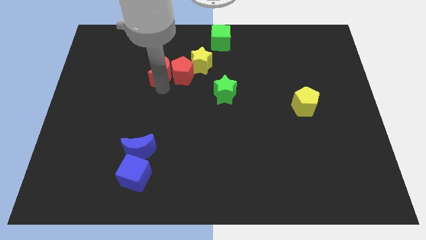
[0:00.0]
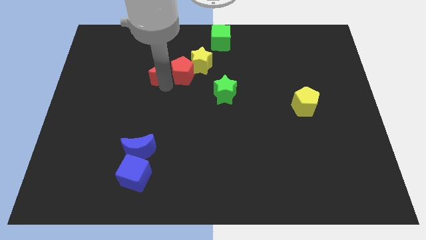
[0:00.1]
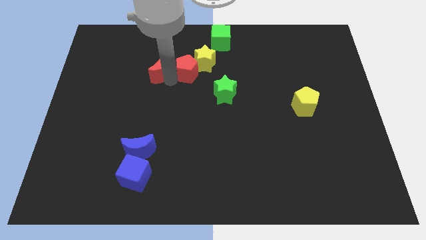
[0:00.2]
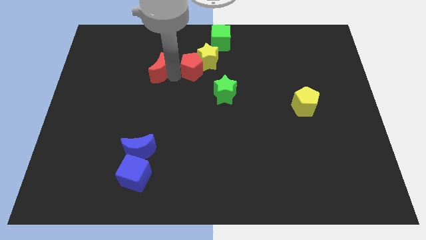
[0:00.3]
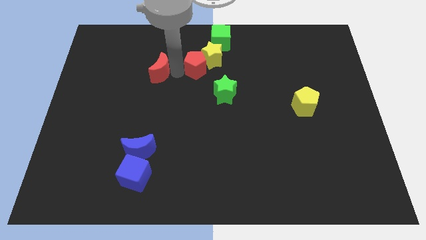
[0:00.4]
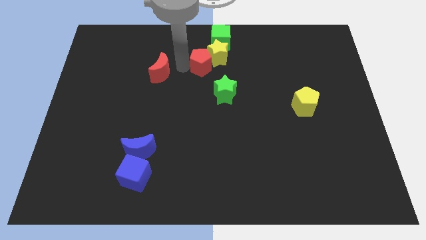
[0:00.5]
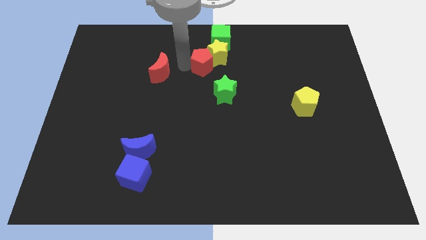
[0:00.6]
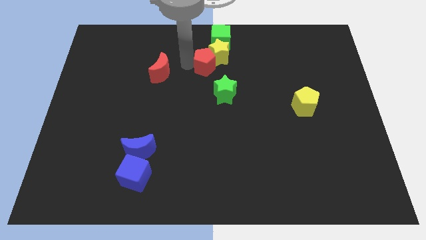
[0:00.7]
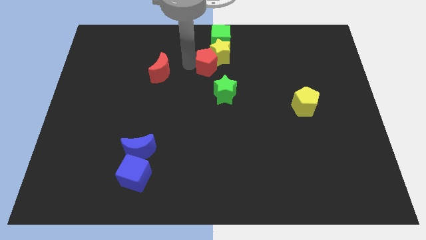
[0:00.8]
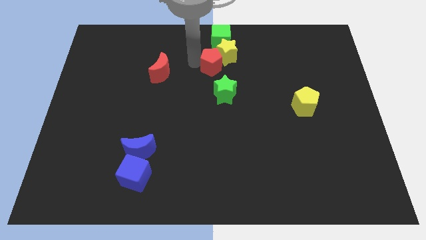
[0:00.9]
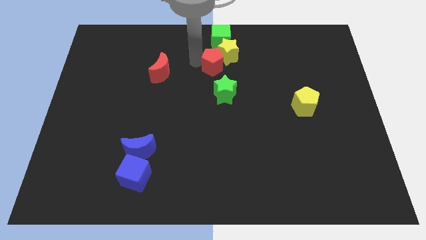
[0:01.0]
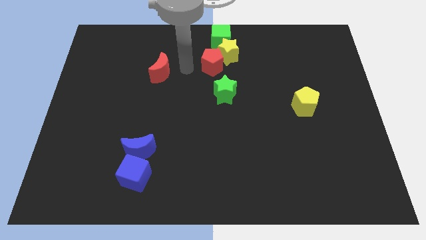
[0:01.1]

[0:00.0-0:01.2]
move the red crescent along with the yellow star to the green cube

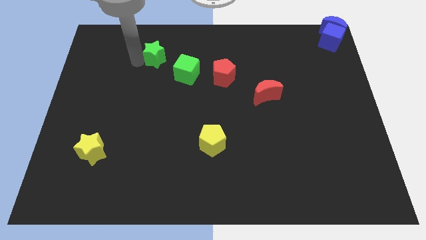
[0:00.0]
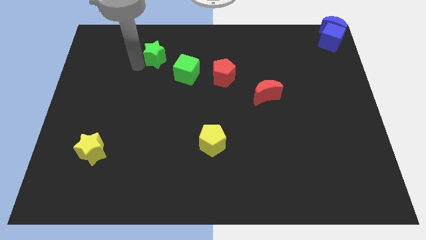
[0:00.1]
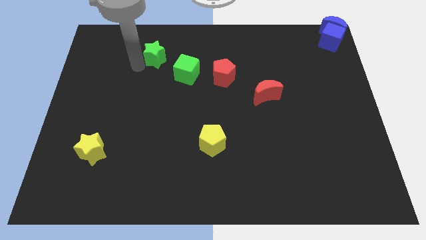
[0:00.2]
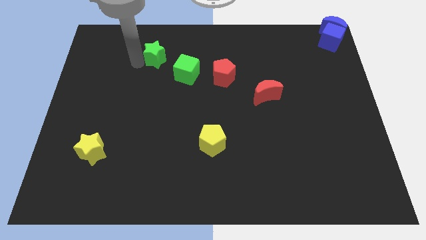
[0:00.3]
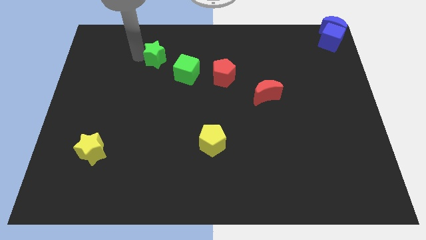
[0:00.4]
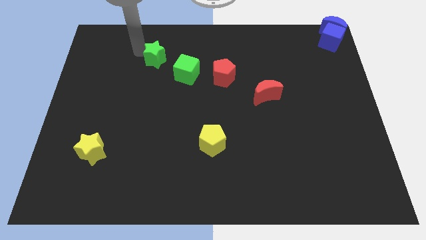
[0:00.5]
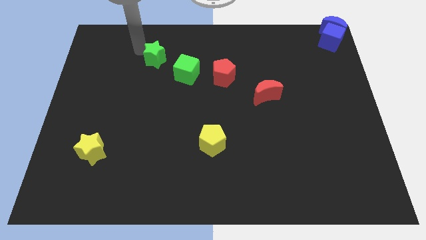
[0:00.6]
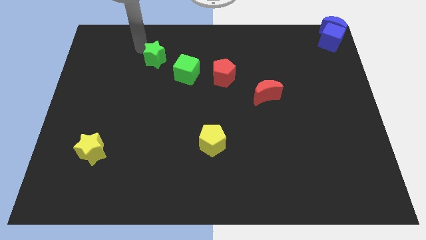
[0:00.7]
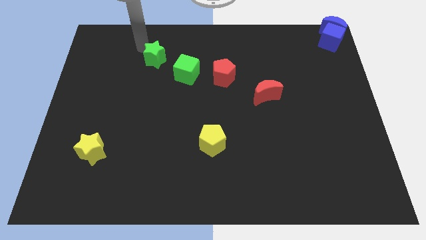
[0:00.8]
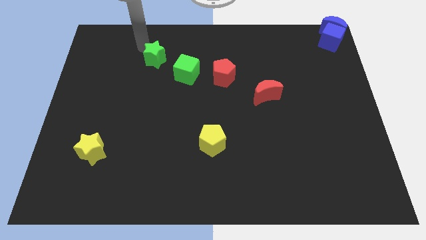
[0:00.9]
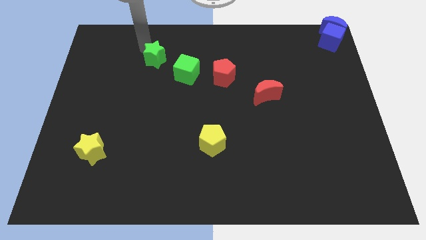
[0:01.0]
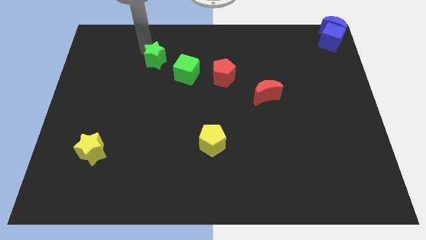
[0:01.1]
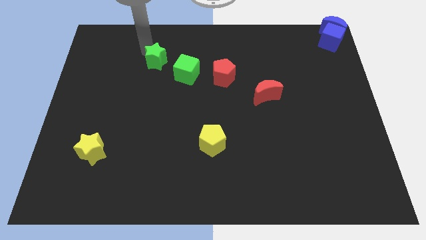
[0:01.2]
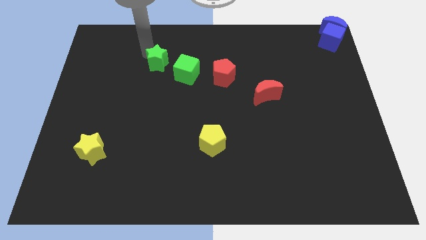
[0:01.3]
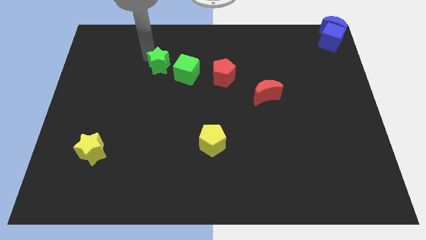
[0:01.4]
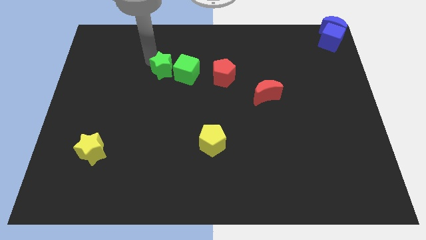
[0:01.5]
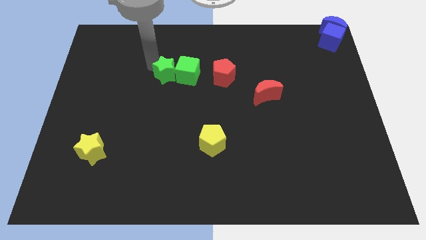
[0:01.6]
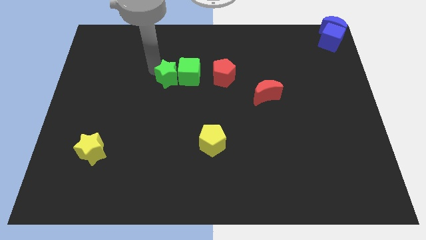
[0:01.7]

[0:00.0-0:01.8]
move the green star to the left of the green cube

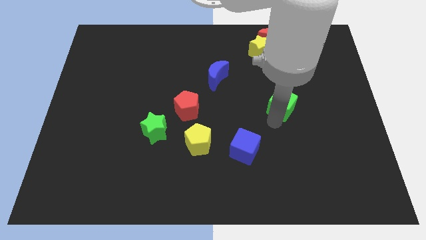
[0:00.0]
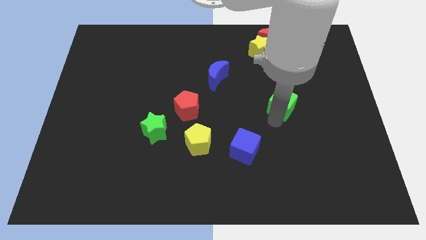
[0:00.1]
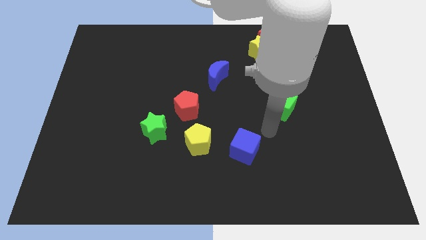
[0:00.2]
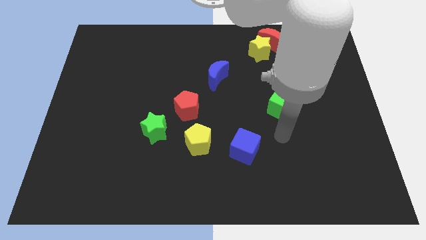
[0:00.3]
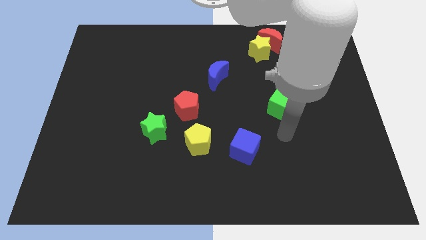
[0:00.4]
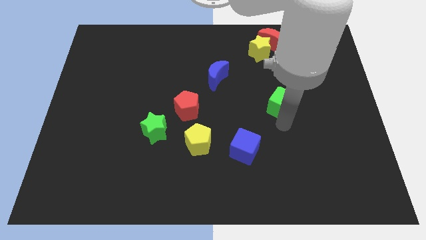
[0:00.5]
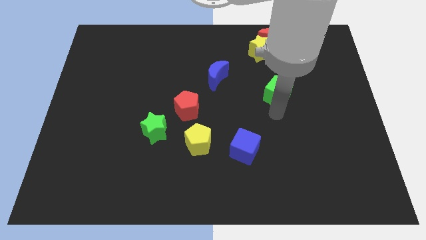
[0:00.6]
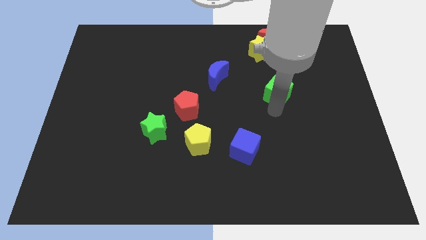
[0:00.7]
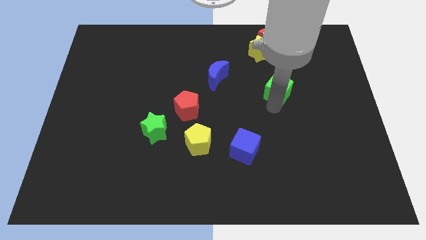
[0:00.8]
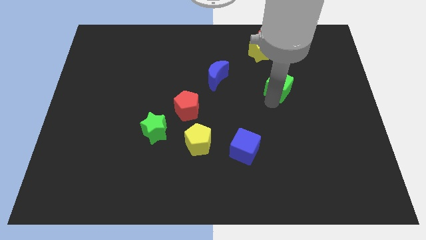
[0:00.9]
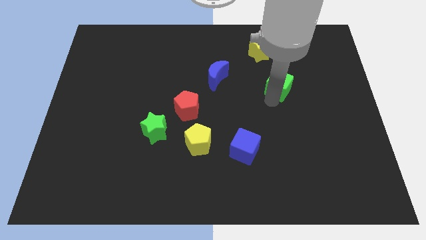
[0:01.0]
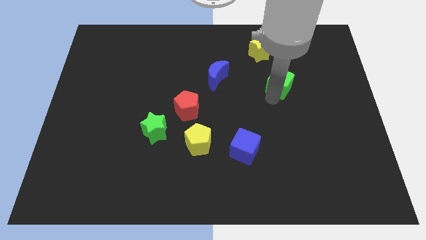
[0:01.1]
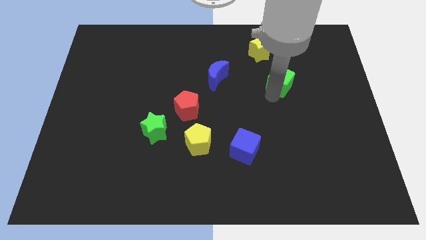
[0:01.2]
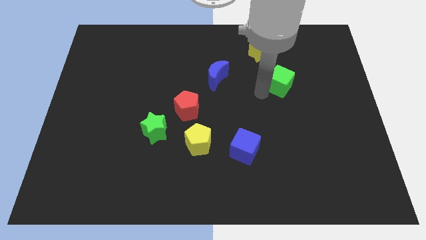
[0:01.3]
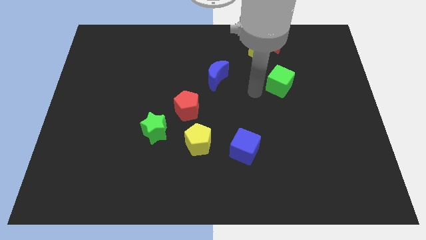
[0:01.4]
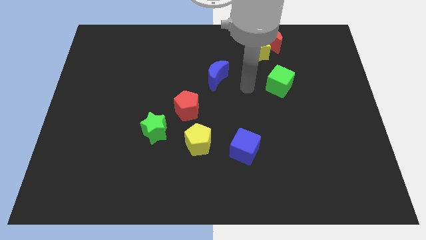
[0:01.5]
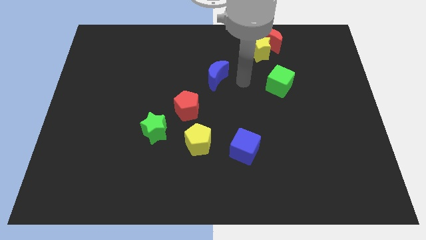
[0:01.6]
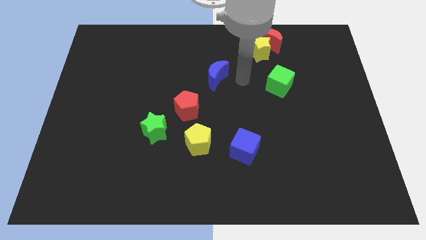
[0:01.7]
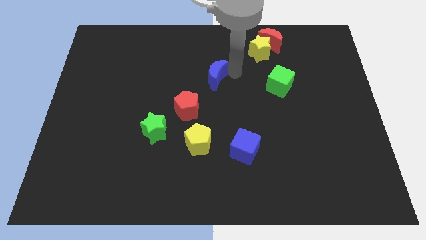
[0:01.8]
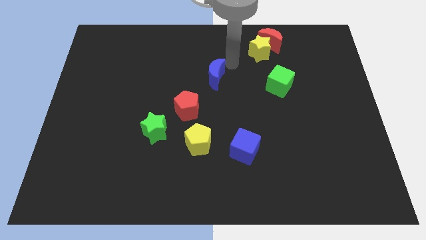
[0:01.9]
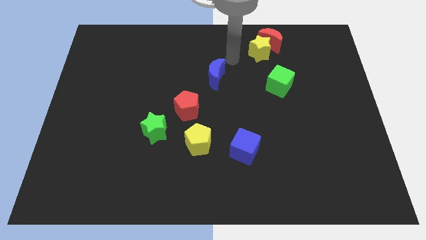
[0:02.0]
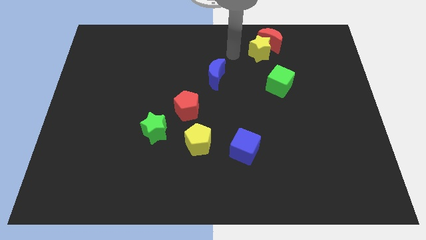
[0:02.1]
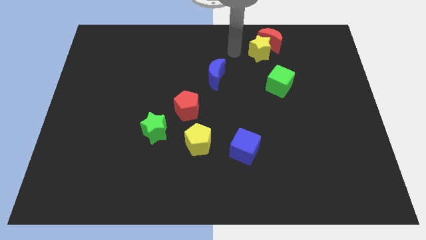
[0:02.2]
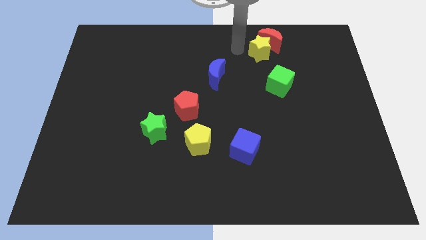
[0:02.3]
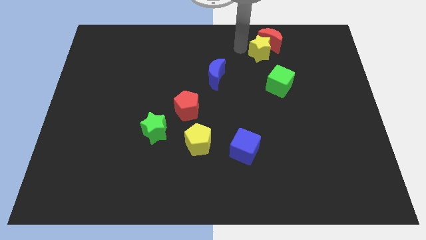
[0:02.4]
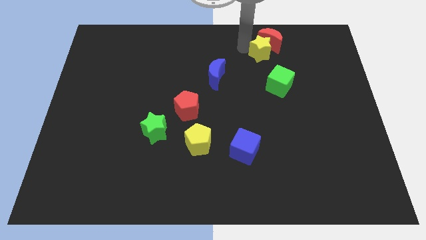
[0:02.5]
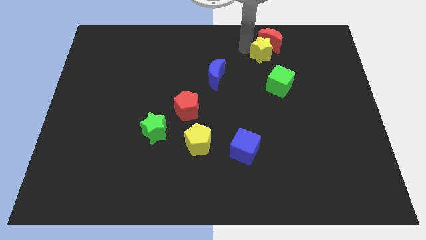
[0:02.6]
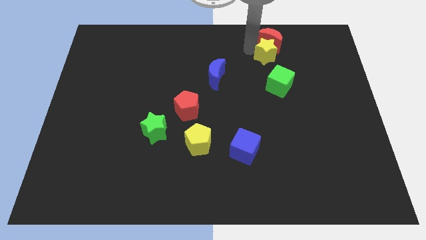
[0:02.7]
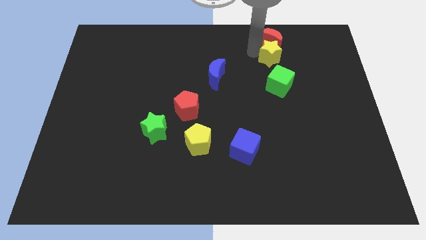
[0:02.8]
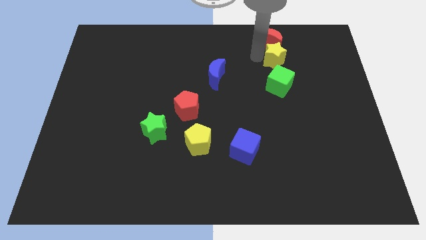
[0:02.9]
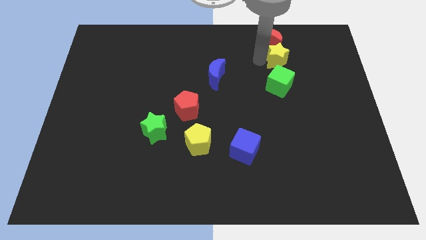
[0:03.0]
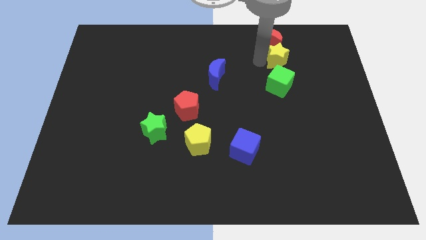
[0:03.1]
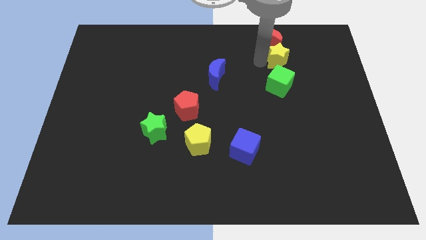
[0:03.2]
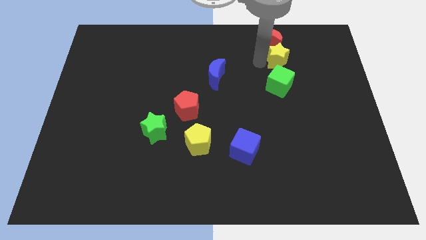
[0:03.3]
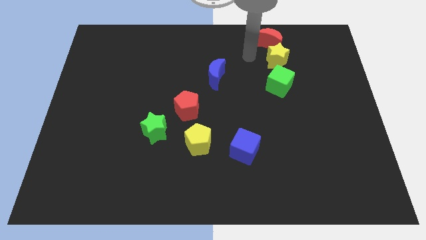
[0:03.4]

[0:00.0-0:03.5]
push the yellow star slightly to the right

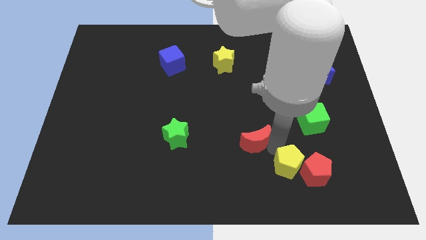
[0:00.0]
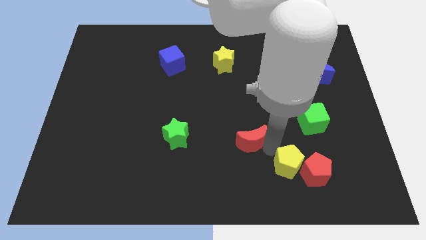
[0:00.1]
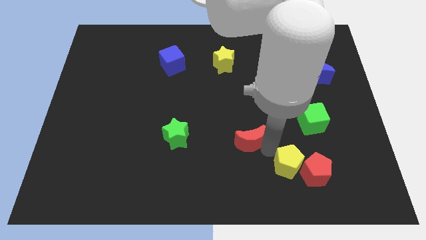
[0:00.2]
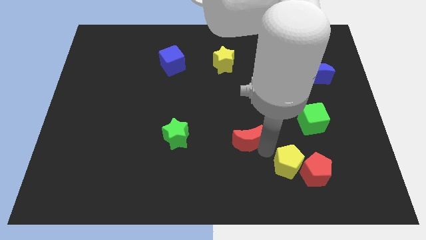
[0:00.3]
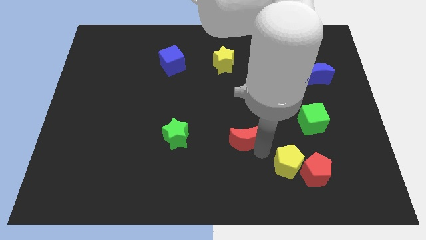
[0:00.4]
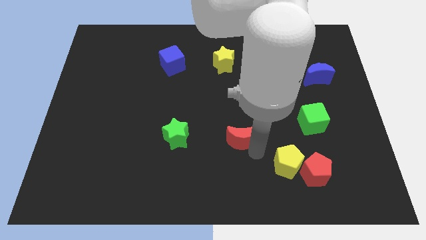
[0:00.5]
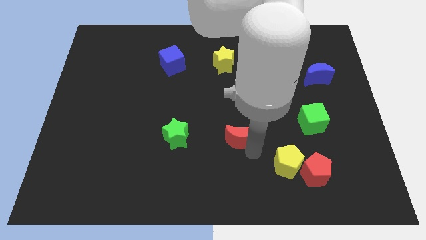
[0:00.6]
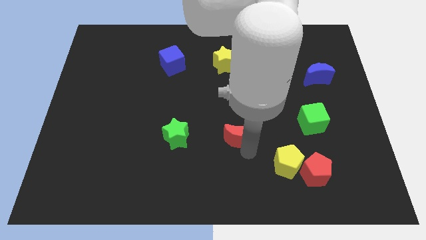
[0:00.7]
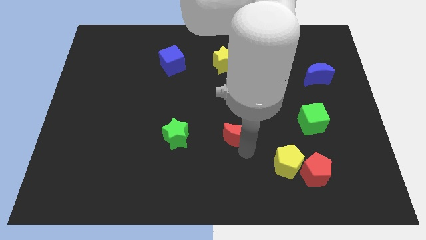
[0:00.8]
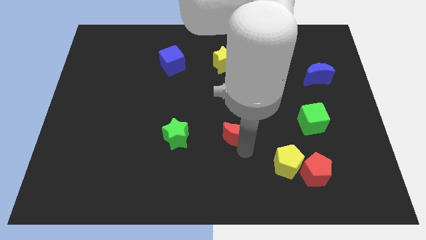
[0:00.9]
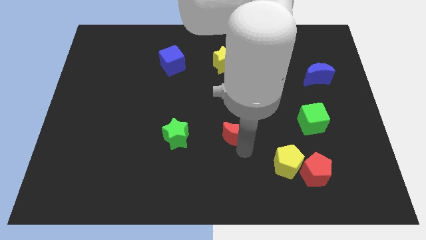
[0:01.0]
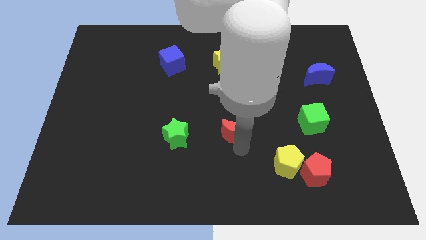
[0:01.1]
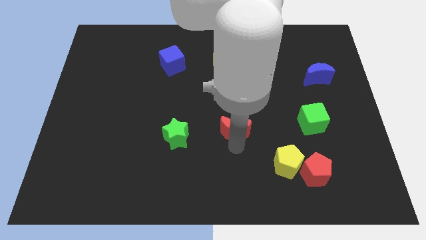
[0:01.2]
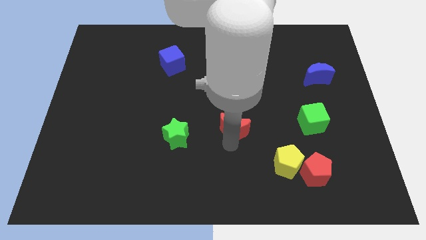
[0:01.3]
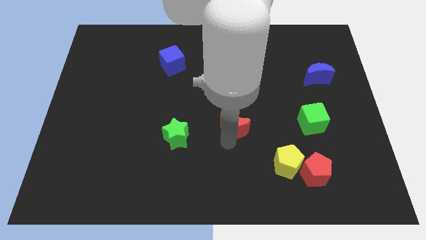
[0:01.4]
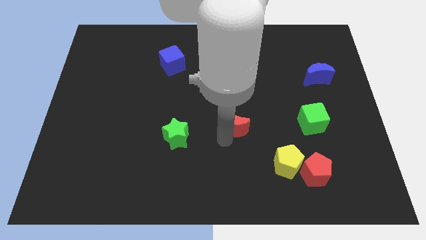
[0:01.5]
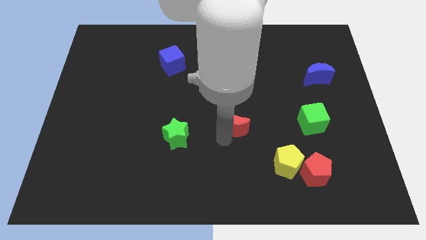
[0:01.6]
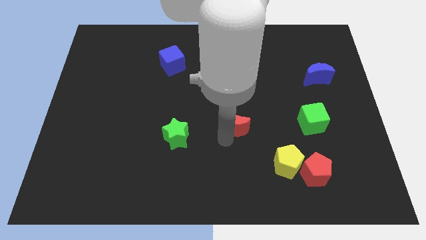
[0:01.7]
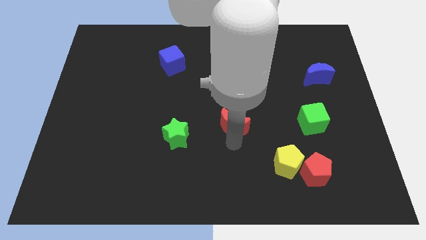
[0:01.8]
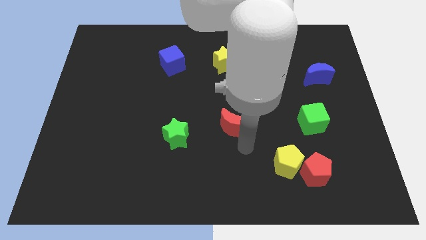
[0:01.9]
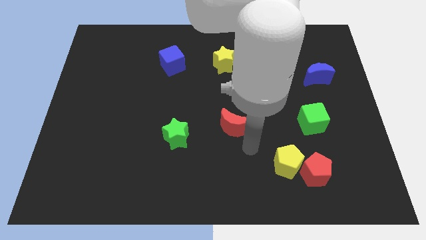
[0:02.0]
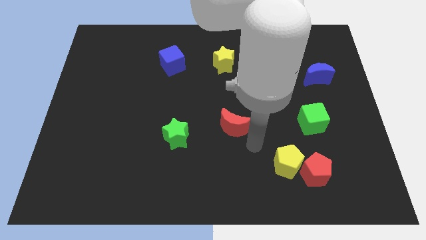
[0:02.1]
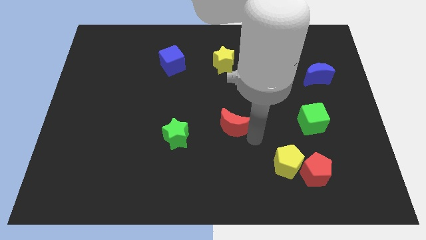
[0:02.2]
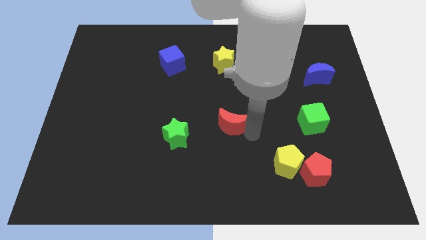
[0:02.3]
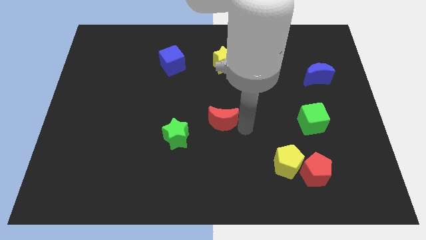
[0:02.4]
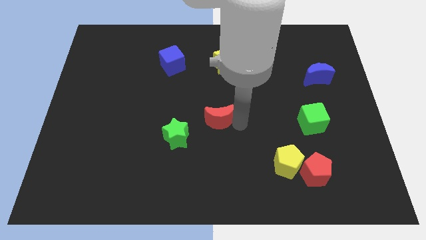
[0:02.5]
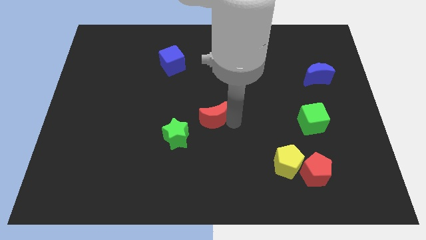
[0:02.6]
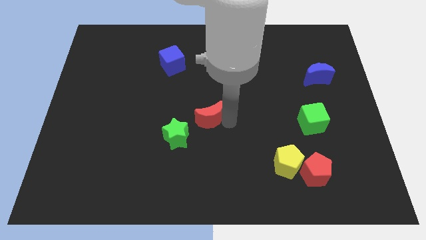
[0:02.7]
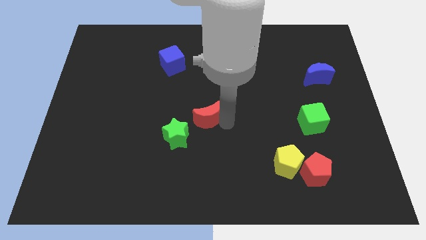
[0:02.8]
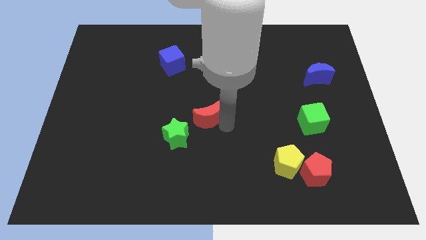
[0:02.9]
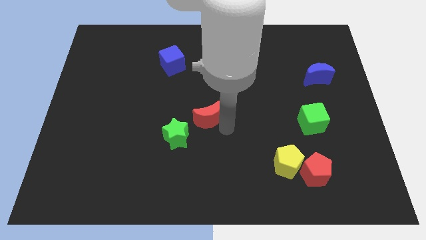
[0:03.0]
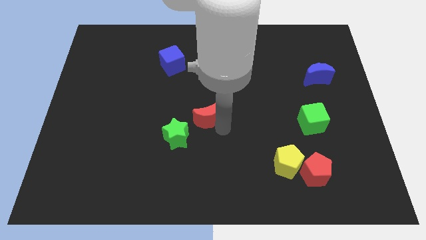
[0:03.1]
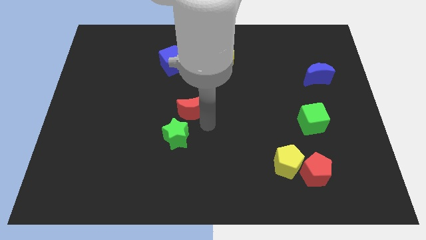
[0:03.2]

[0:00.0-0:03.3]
place the red crescent close to green star
